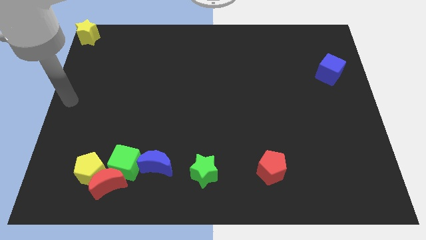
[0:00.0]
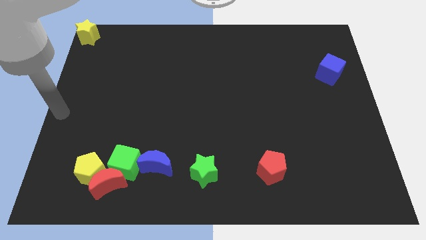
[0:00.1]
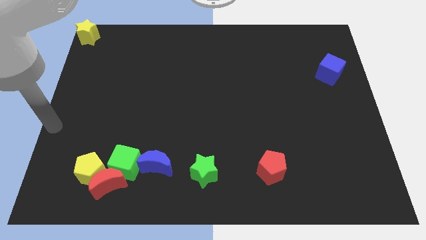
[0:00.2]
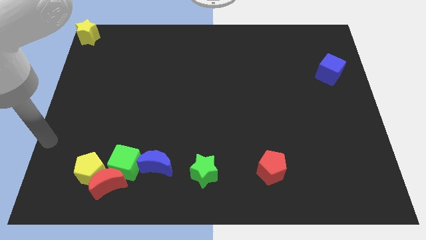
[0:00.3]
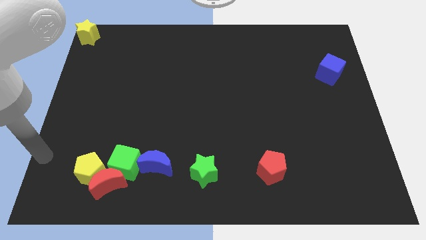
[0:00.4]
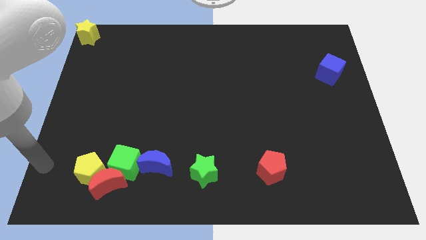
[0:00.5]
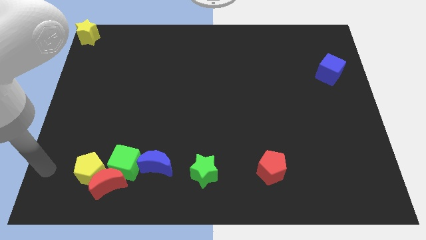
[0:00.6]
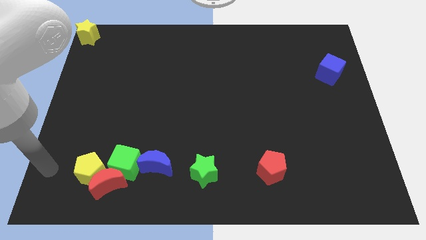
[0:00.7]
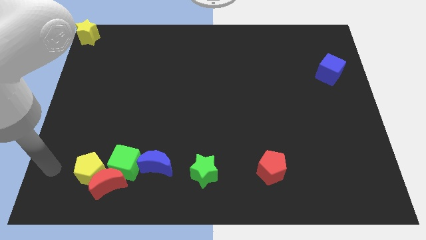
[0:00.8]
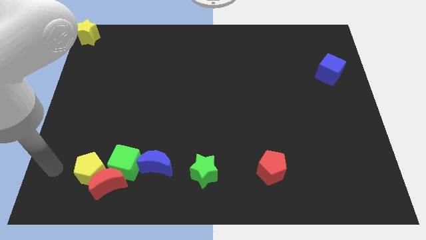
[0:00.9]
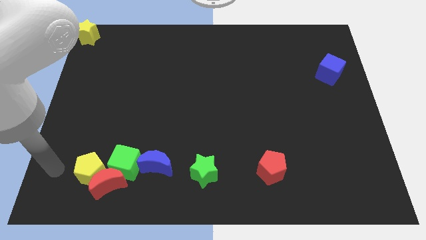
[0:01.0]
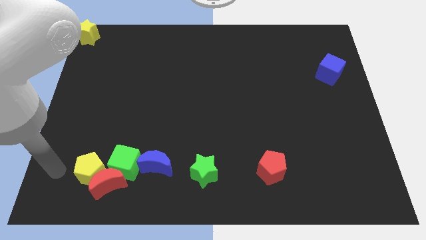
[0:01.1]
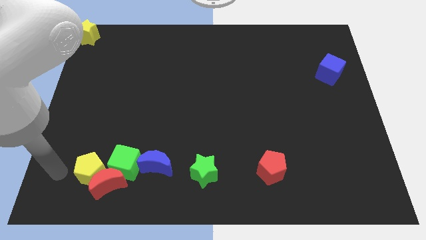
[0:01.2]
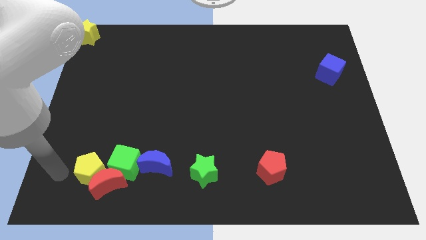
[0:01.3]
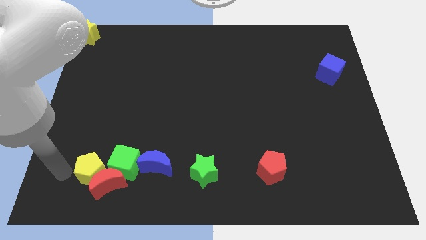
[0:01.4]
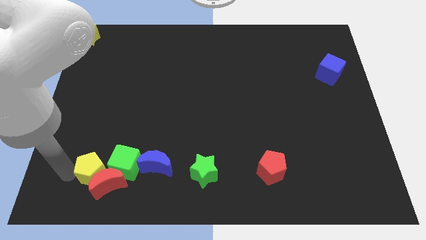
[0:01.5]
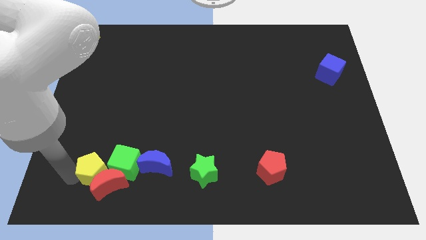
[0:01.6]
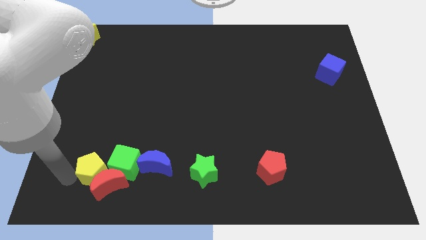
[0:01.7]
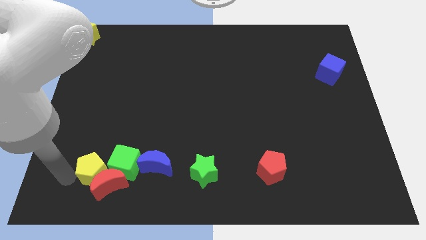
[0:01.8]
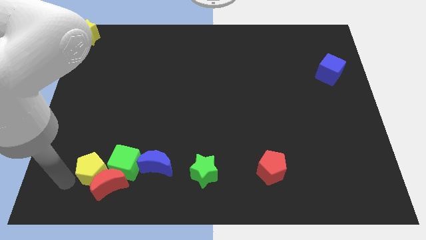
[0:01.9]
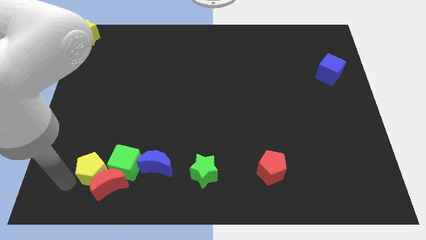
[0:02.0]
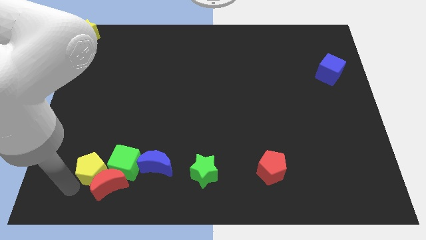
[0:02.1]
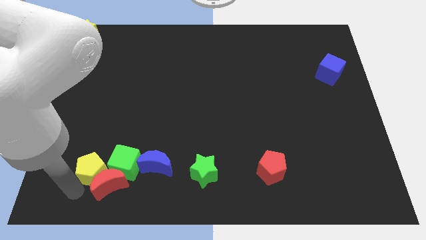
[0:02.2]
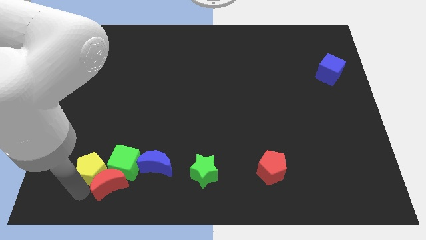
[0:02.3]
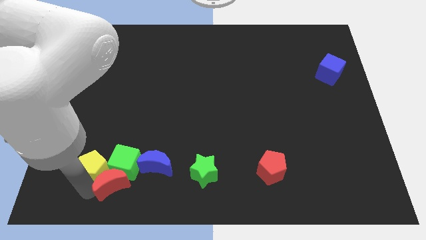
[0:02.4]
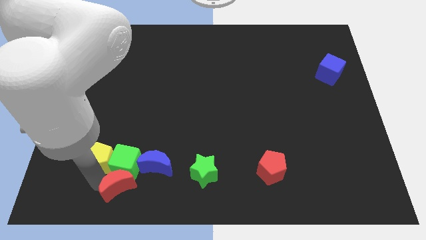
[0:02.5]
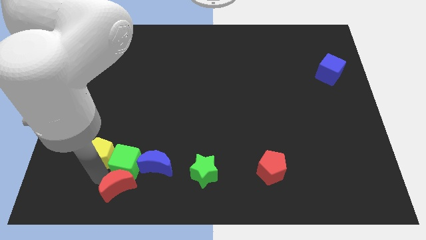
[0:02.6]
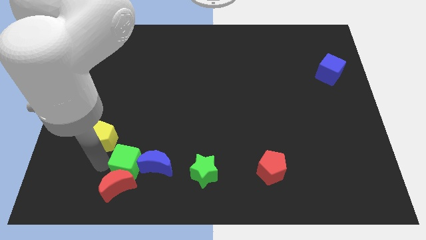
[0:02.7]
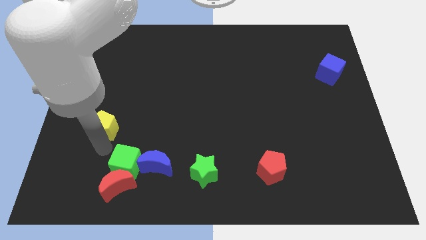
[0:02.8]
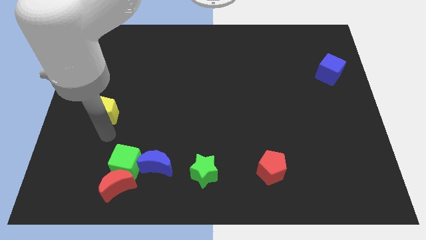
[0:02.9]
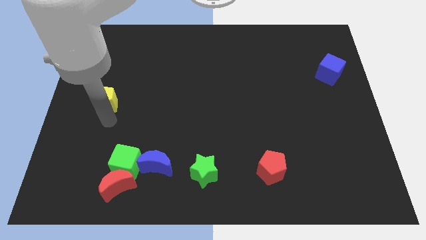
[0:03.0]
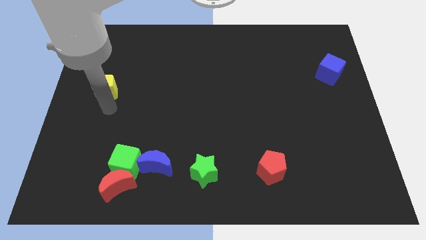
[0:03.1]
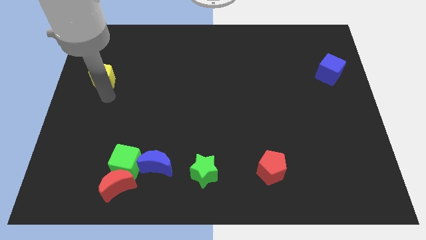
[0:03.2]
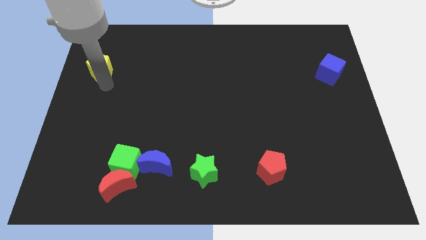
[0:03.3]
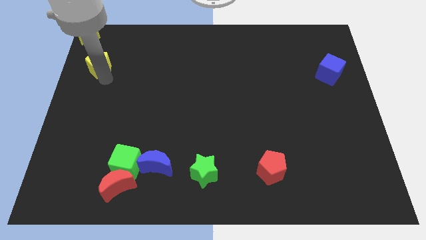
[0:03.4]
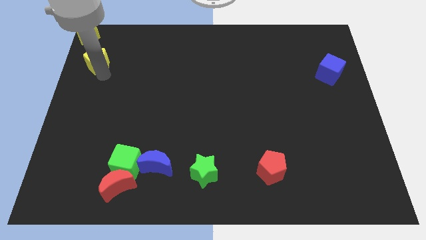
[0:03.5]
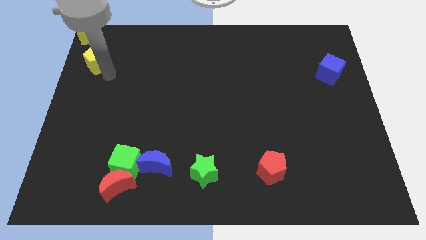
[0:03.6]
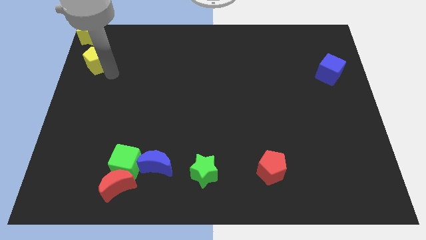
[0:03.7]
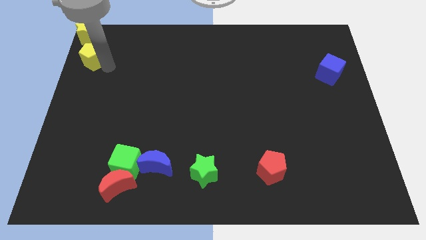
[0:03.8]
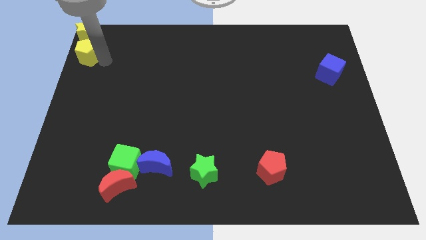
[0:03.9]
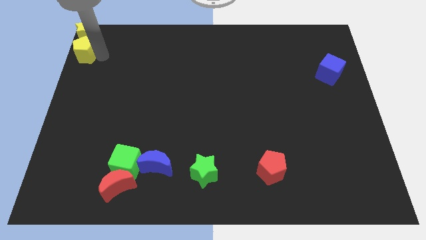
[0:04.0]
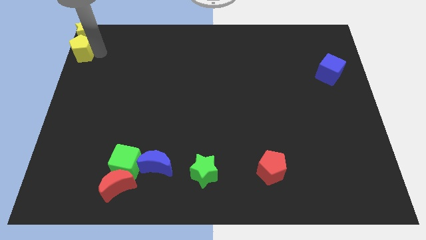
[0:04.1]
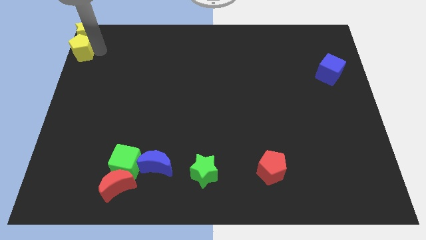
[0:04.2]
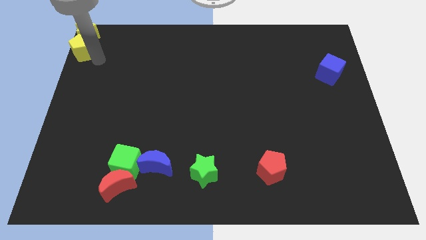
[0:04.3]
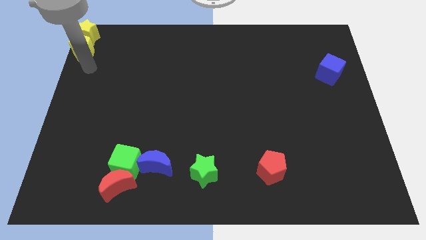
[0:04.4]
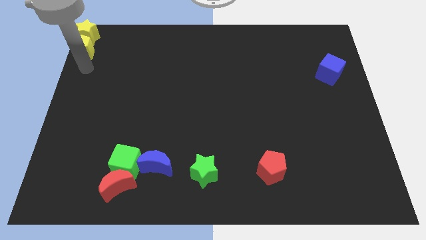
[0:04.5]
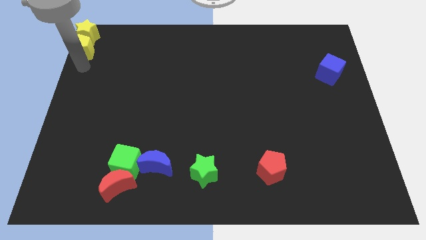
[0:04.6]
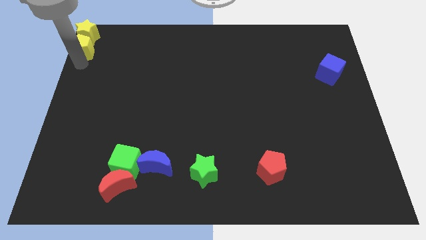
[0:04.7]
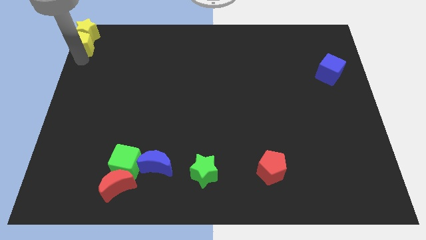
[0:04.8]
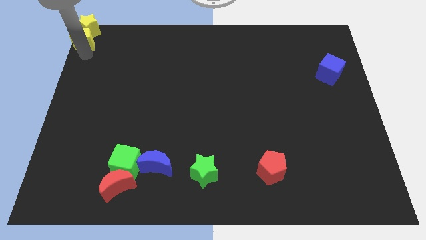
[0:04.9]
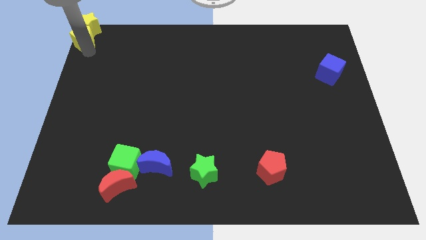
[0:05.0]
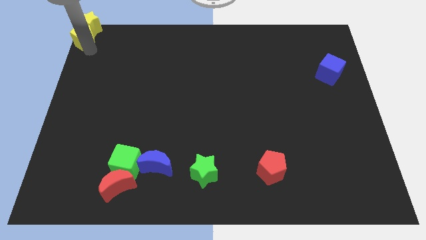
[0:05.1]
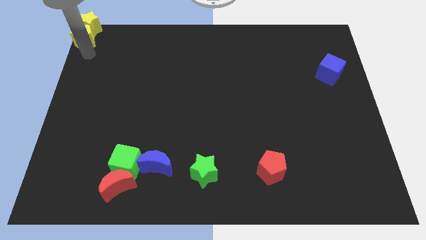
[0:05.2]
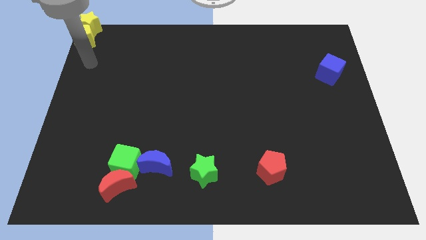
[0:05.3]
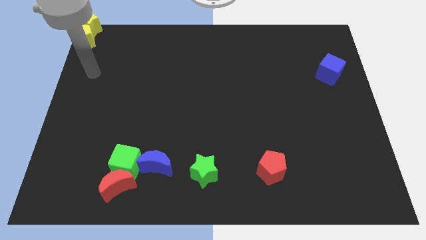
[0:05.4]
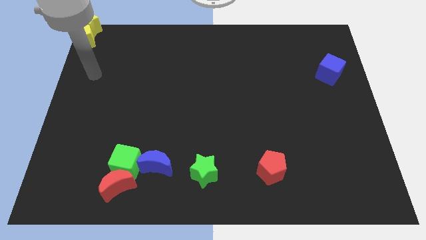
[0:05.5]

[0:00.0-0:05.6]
push the yellow pentagon into the yellow star

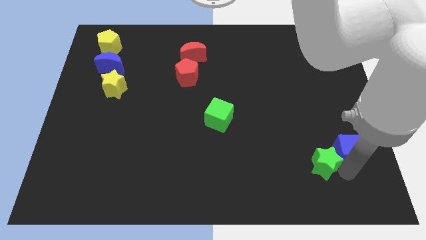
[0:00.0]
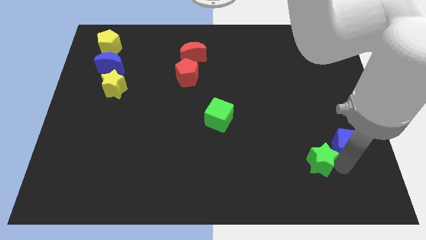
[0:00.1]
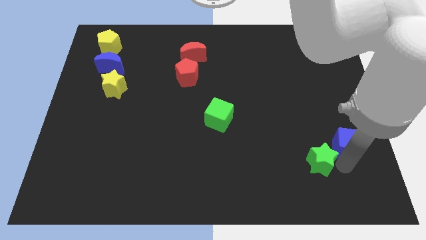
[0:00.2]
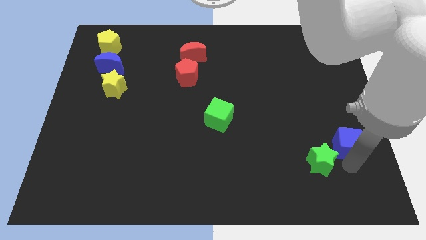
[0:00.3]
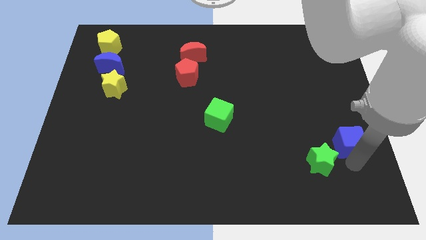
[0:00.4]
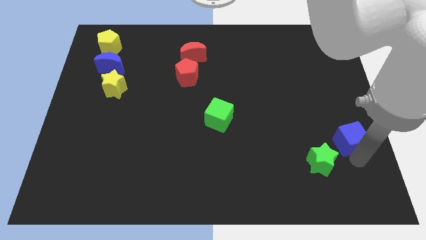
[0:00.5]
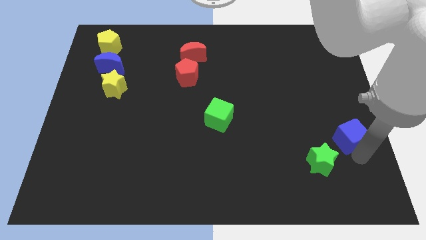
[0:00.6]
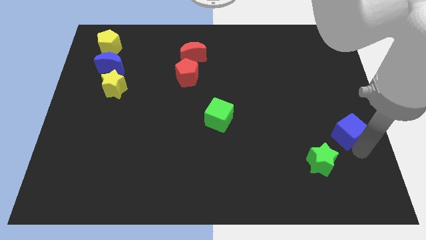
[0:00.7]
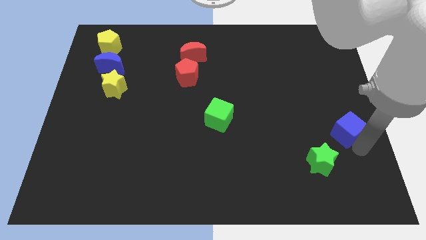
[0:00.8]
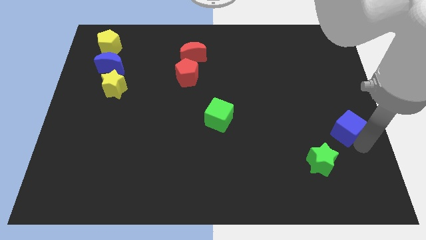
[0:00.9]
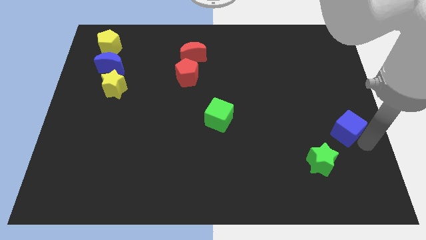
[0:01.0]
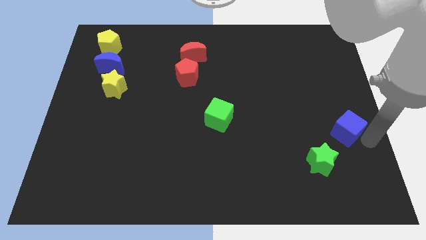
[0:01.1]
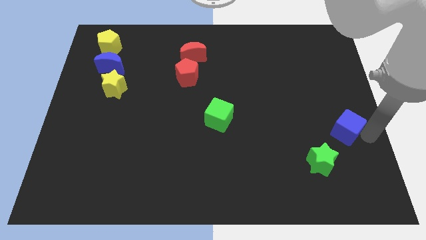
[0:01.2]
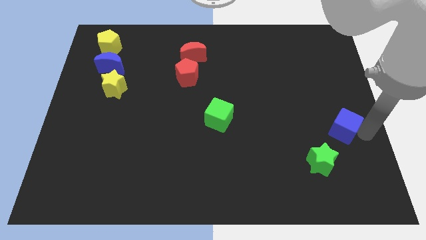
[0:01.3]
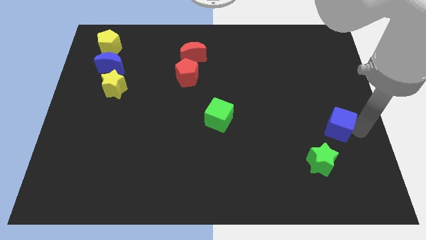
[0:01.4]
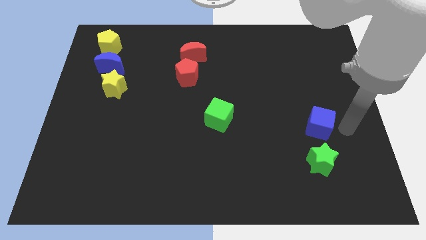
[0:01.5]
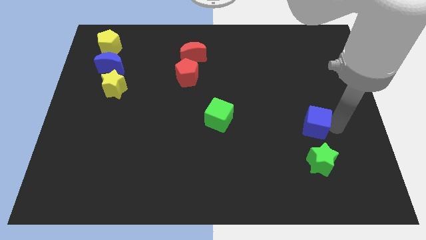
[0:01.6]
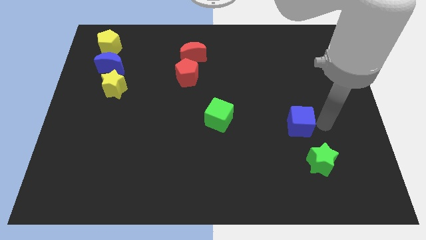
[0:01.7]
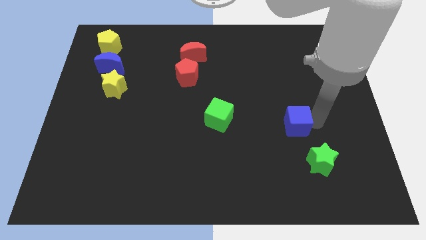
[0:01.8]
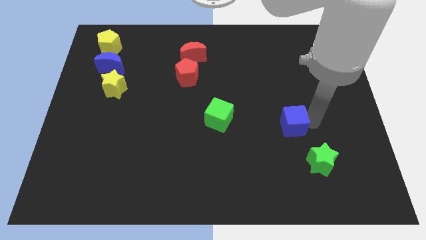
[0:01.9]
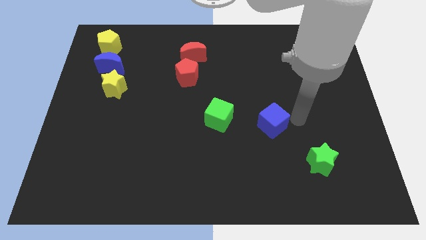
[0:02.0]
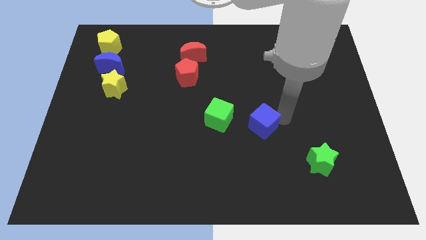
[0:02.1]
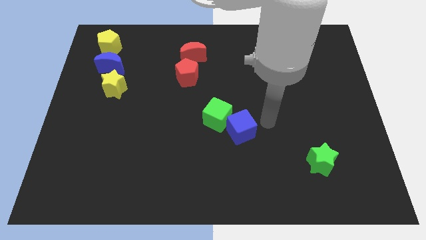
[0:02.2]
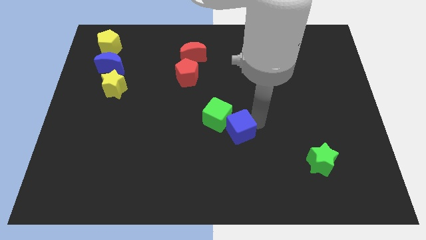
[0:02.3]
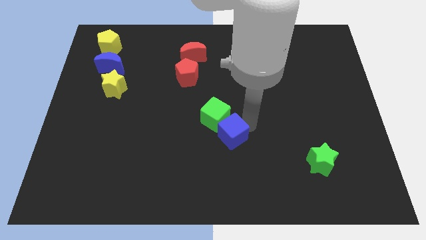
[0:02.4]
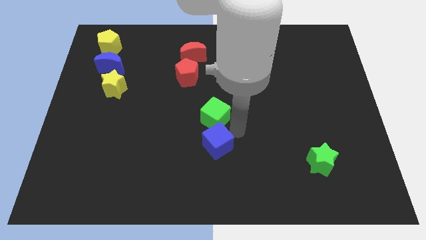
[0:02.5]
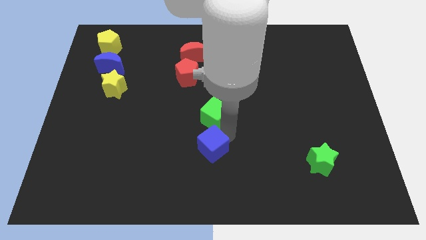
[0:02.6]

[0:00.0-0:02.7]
push the blue cube below green cube

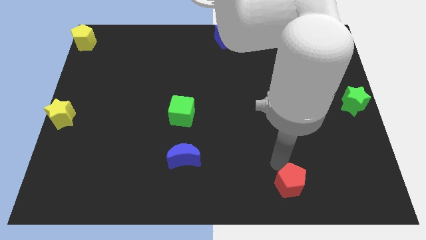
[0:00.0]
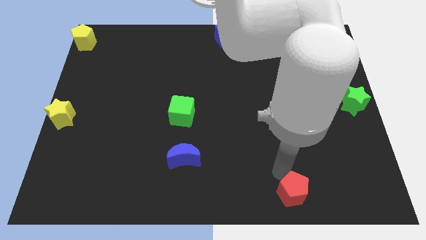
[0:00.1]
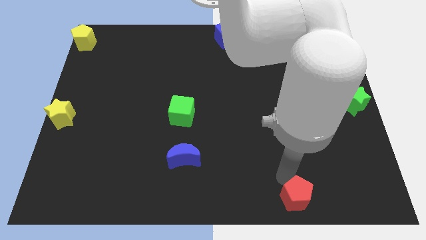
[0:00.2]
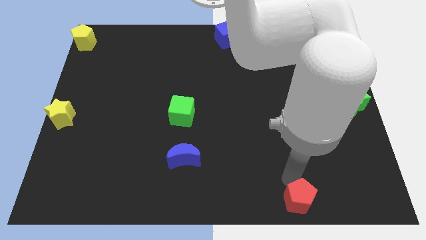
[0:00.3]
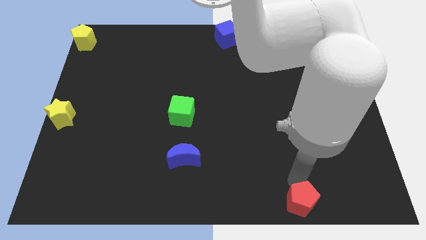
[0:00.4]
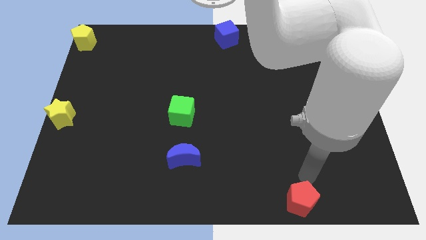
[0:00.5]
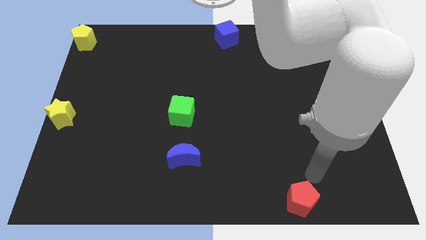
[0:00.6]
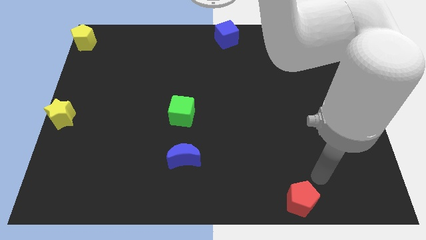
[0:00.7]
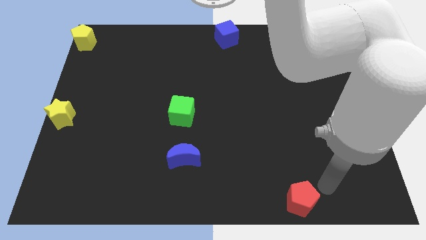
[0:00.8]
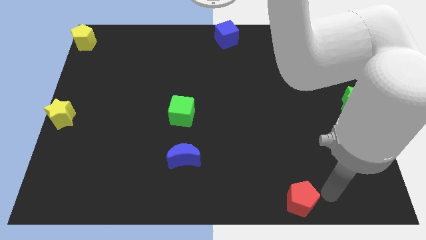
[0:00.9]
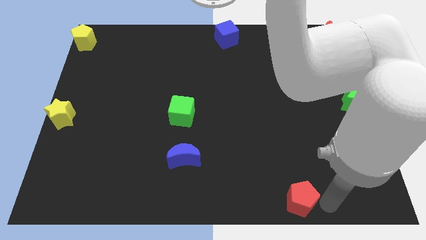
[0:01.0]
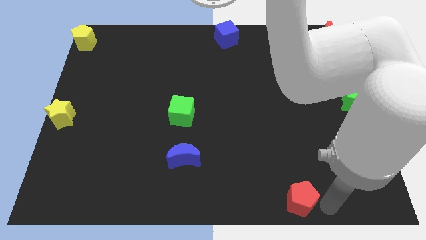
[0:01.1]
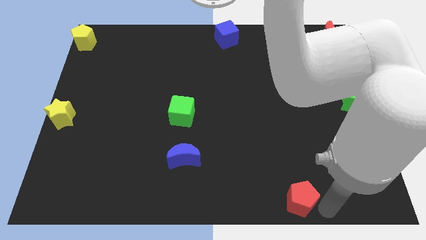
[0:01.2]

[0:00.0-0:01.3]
push red moon to the bottom of the board
